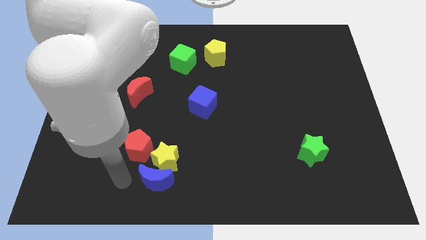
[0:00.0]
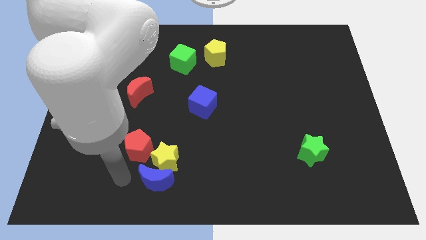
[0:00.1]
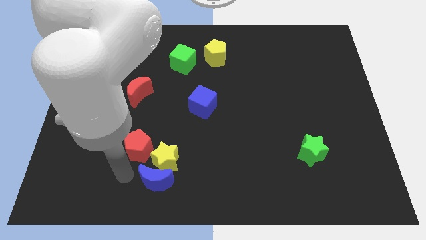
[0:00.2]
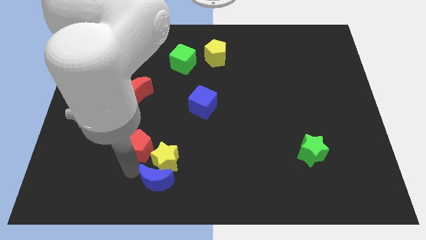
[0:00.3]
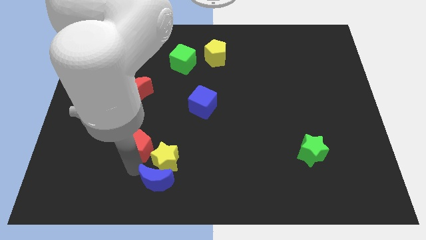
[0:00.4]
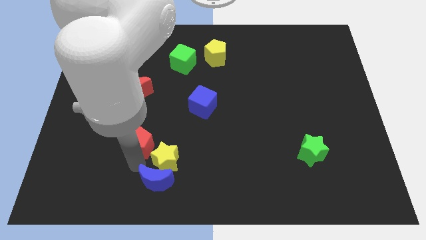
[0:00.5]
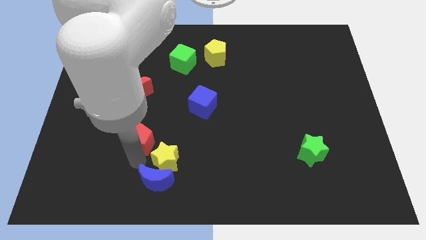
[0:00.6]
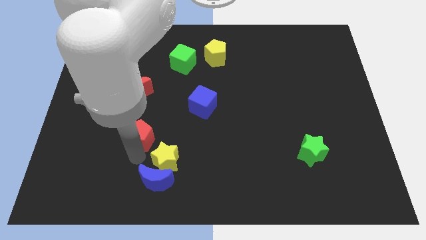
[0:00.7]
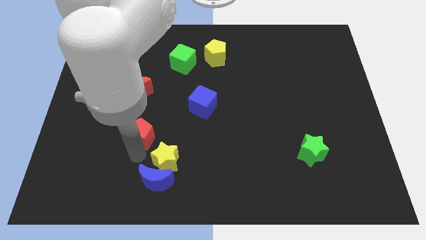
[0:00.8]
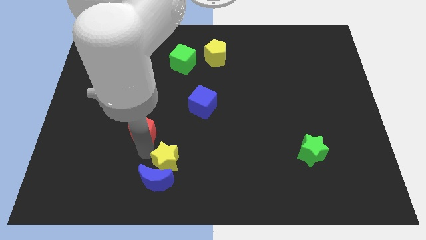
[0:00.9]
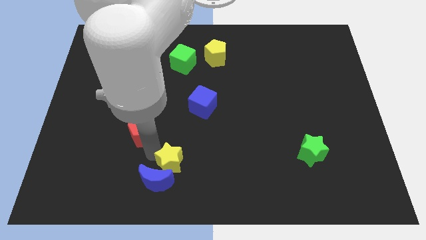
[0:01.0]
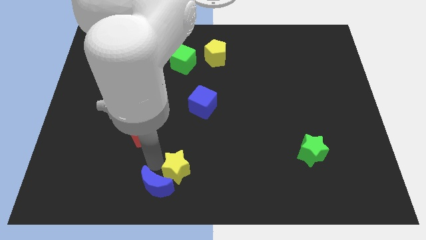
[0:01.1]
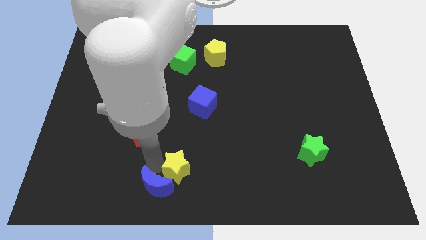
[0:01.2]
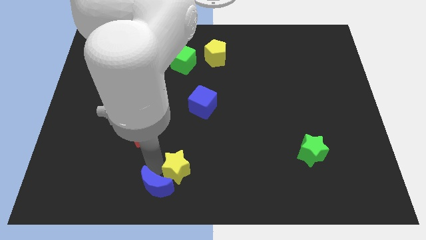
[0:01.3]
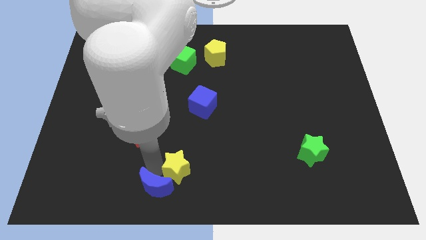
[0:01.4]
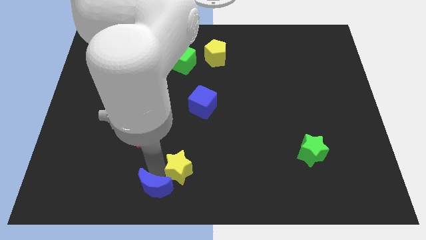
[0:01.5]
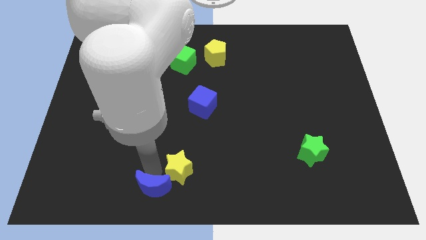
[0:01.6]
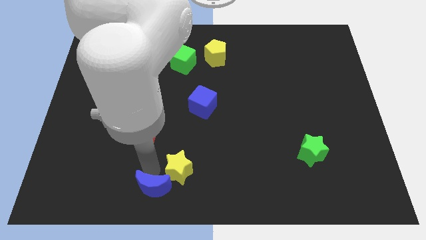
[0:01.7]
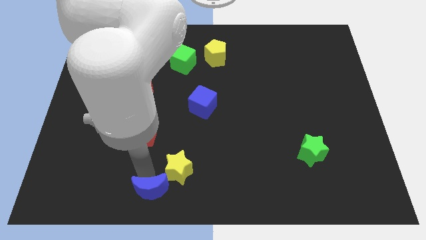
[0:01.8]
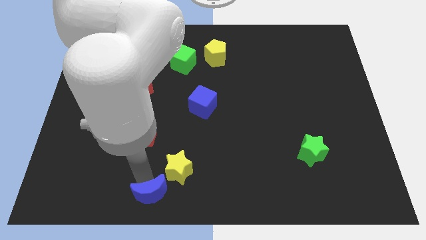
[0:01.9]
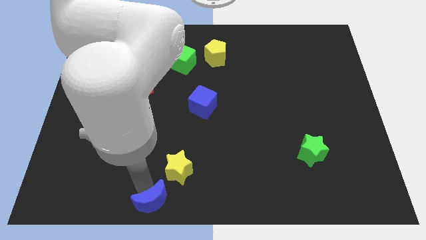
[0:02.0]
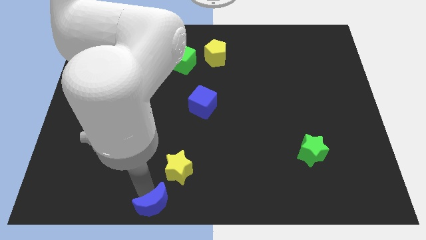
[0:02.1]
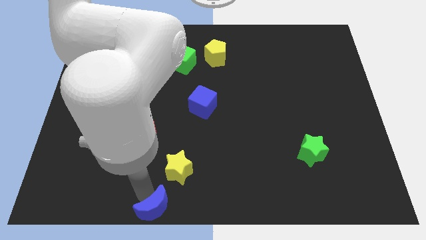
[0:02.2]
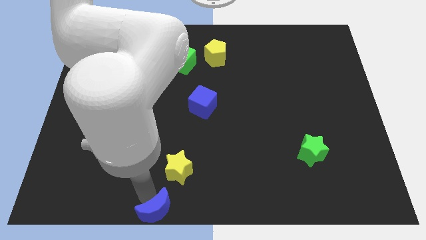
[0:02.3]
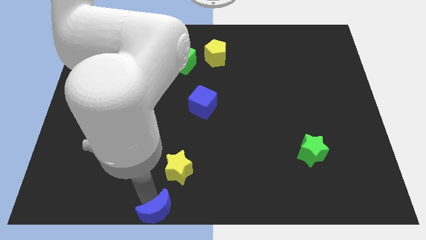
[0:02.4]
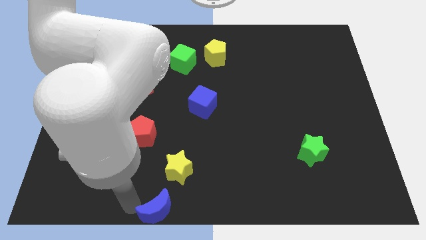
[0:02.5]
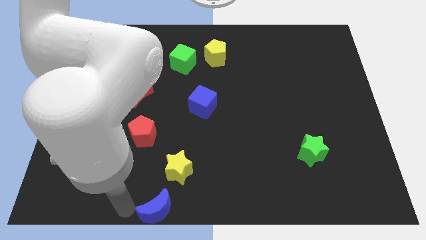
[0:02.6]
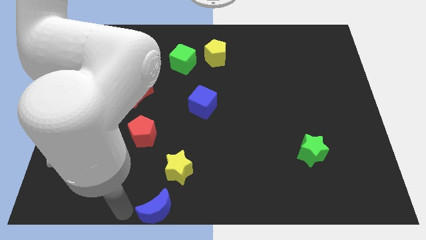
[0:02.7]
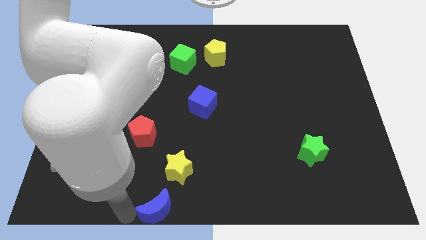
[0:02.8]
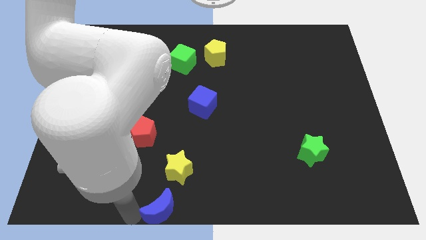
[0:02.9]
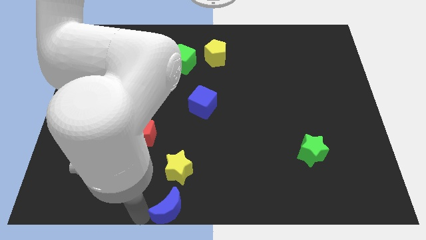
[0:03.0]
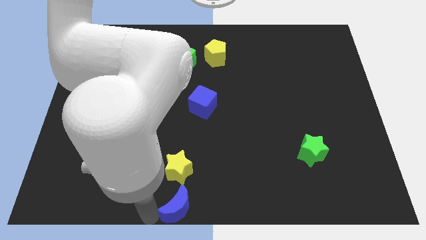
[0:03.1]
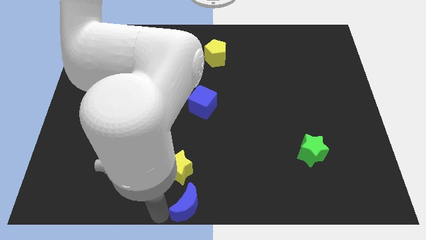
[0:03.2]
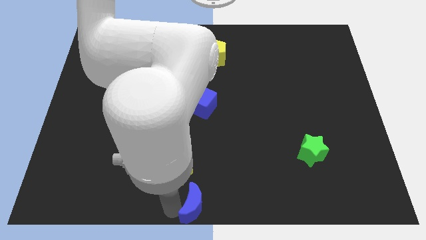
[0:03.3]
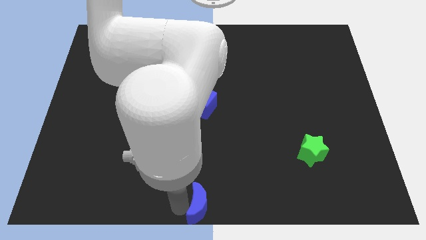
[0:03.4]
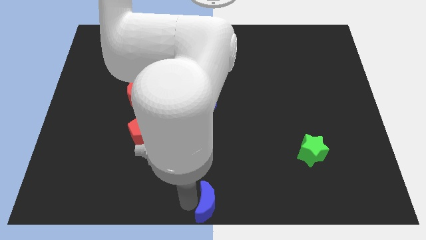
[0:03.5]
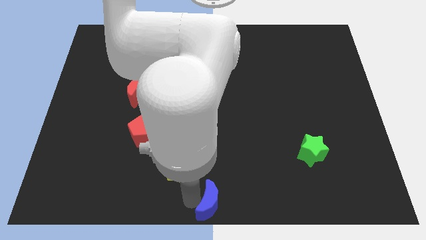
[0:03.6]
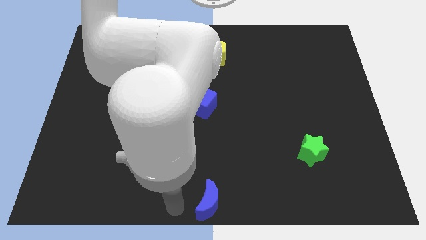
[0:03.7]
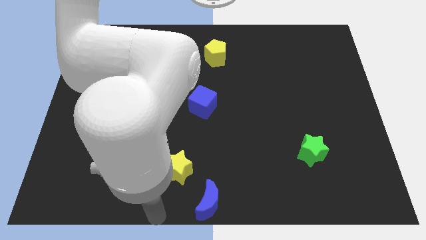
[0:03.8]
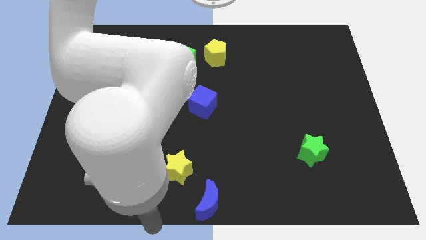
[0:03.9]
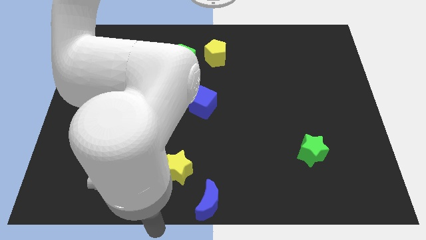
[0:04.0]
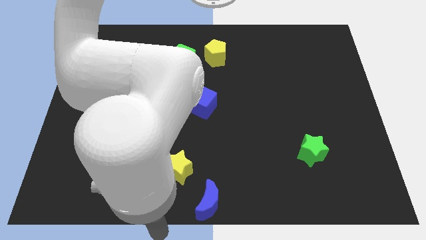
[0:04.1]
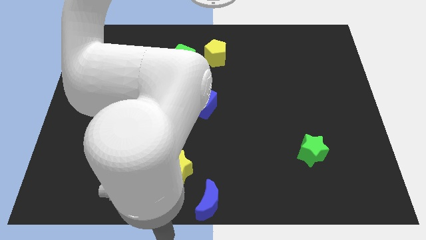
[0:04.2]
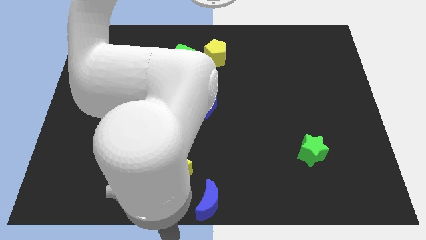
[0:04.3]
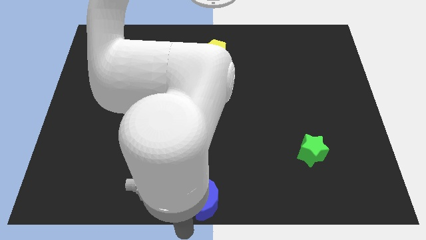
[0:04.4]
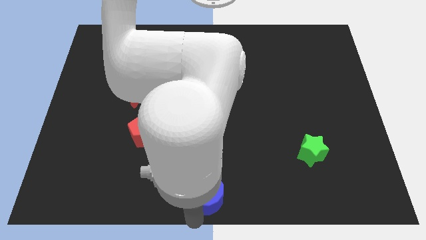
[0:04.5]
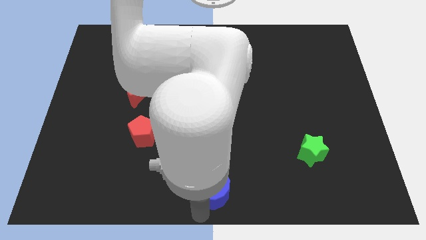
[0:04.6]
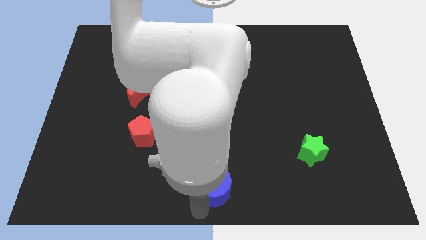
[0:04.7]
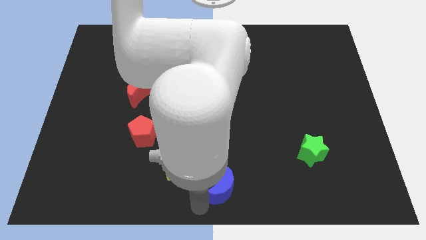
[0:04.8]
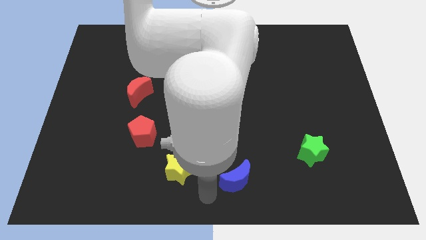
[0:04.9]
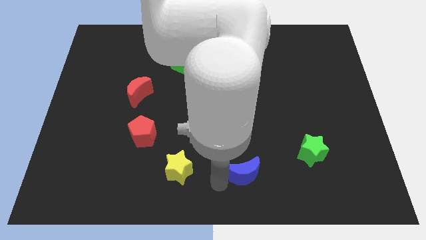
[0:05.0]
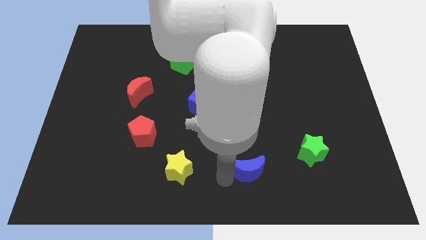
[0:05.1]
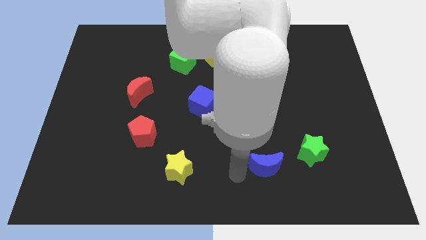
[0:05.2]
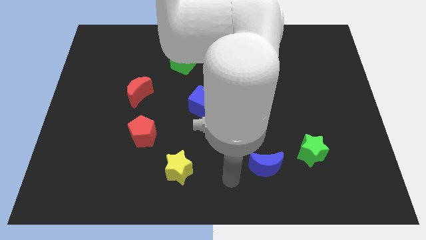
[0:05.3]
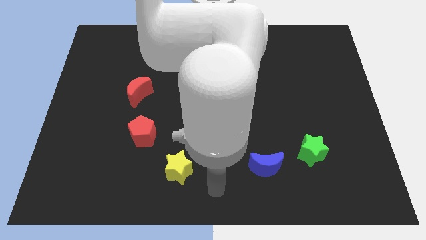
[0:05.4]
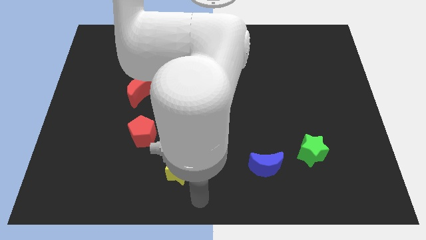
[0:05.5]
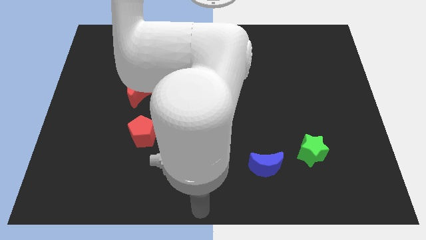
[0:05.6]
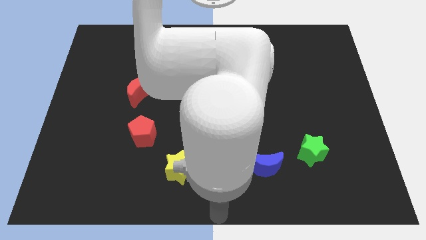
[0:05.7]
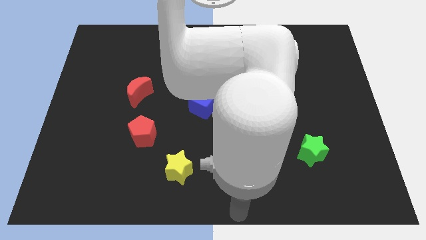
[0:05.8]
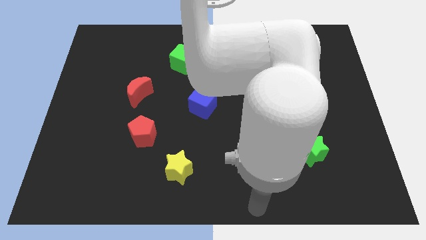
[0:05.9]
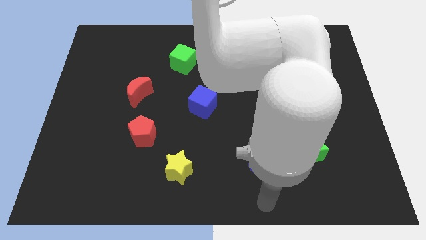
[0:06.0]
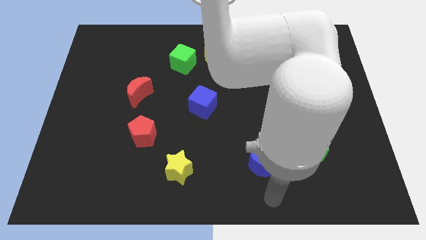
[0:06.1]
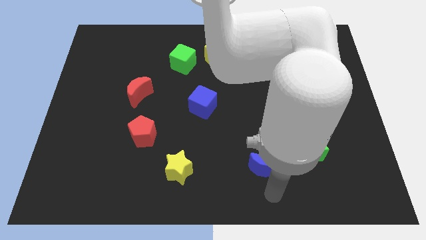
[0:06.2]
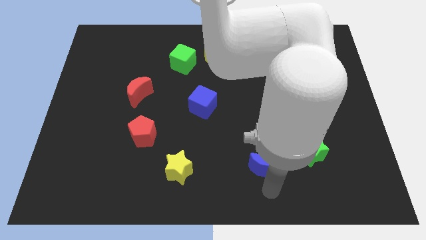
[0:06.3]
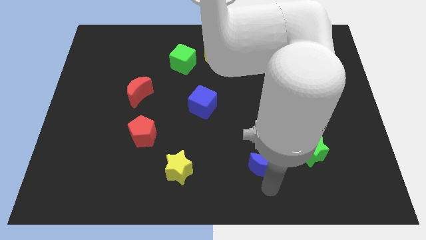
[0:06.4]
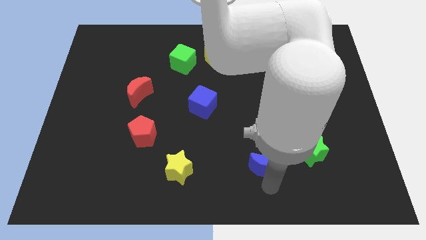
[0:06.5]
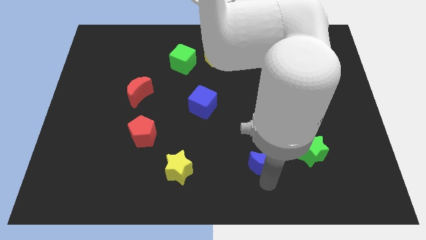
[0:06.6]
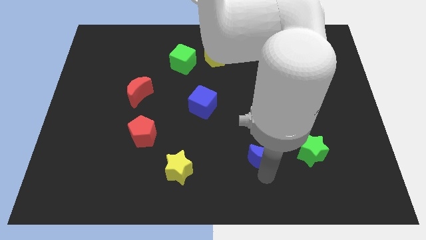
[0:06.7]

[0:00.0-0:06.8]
move the blue crescent left to the green star

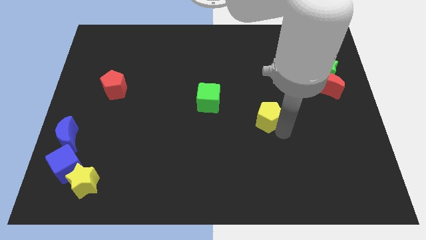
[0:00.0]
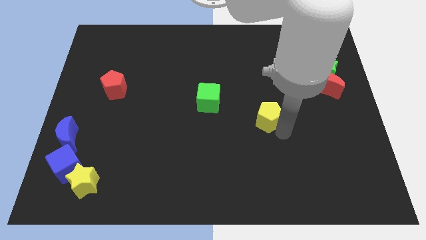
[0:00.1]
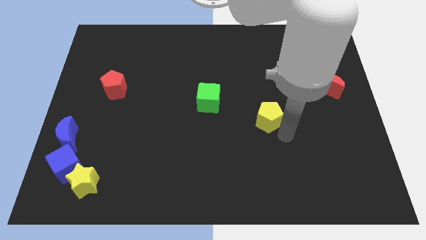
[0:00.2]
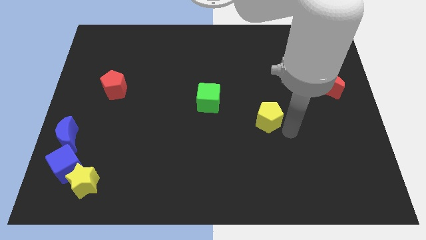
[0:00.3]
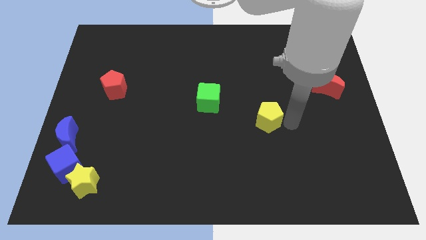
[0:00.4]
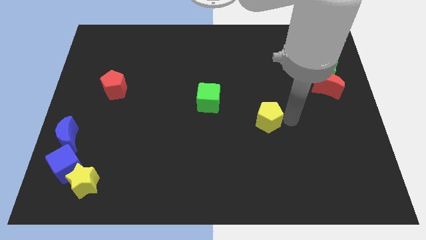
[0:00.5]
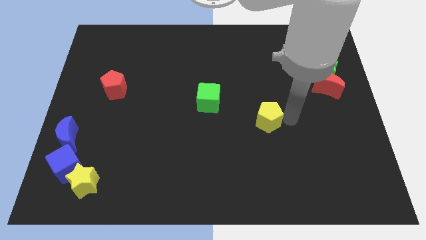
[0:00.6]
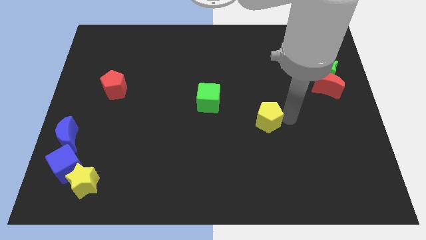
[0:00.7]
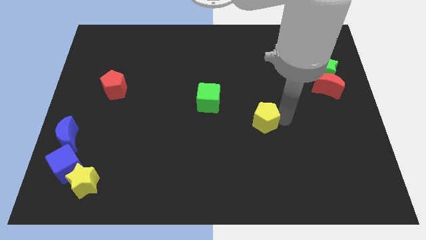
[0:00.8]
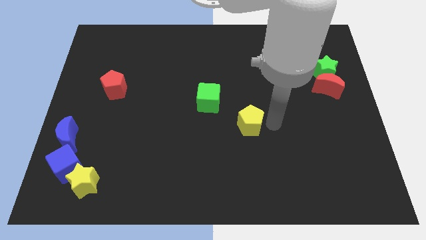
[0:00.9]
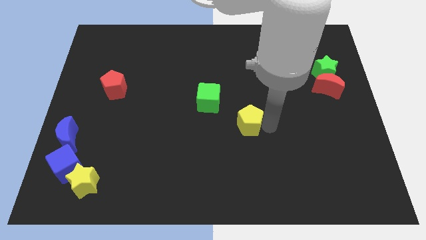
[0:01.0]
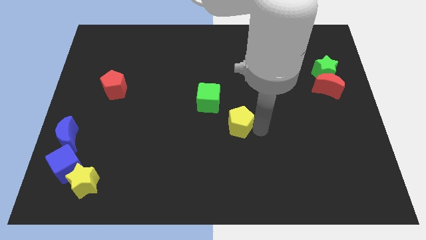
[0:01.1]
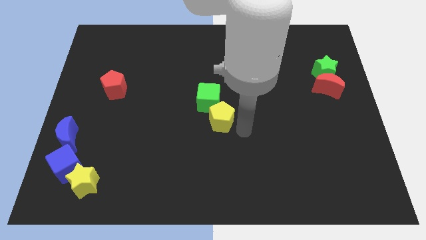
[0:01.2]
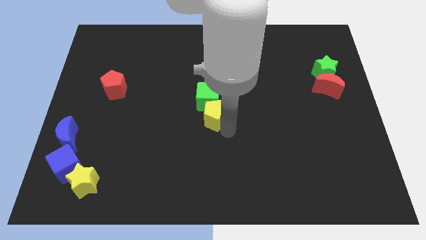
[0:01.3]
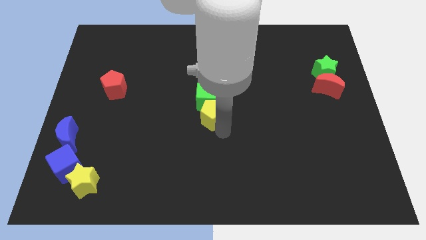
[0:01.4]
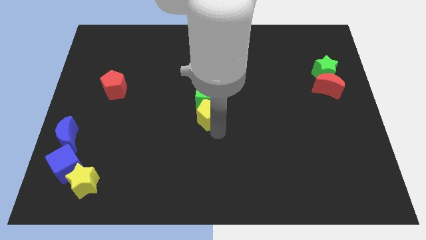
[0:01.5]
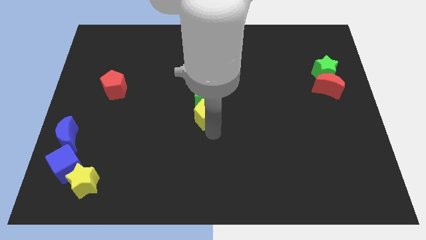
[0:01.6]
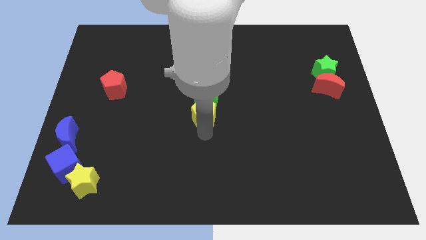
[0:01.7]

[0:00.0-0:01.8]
place the yellow pentagon below the green block

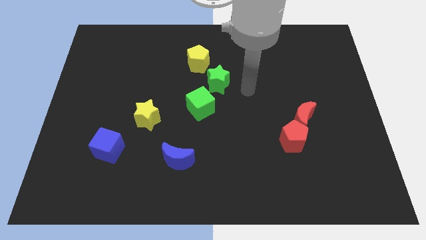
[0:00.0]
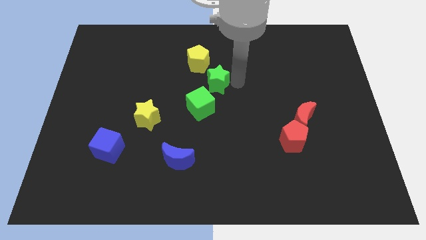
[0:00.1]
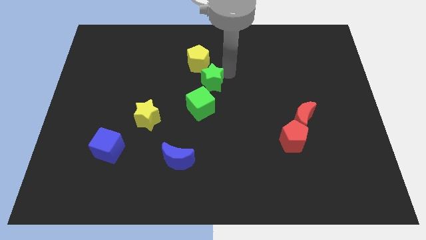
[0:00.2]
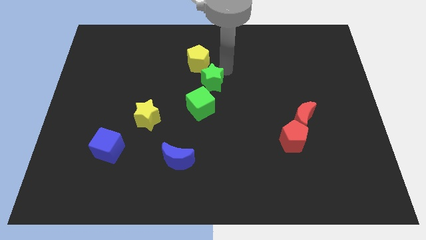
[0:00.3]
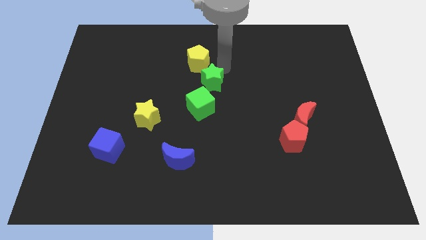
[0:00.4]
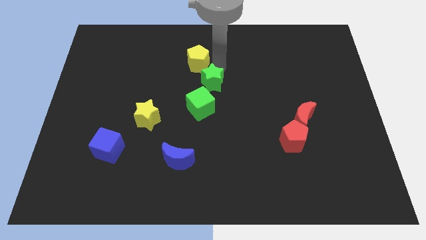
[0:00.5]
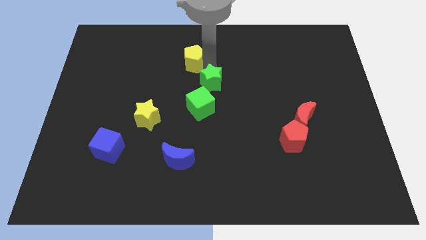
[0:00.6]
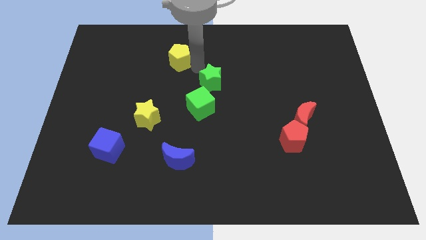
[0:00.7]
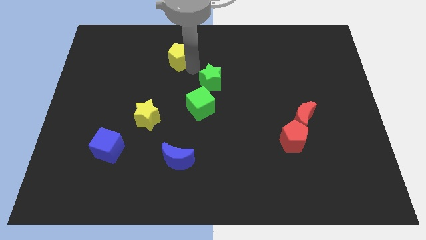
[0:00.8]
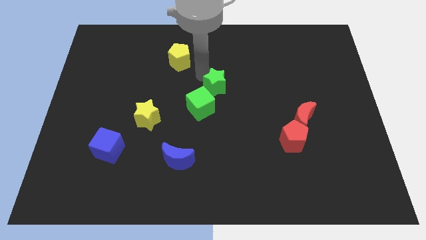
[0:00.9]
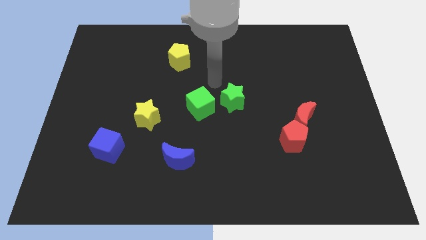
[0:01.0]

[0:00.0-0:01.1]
place your arm in between the yellow pentagon and green star
